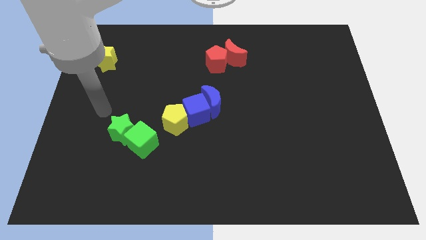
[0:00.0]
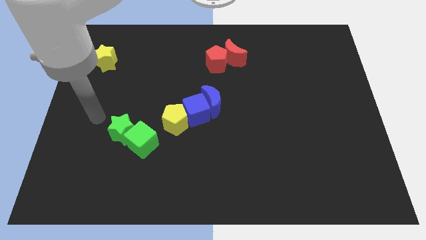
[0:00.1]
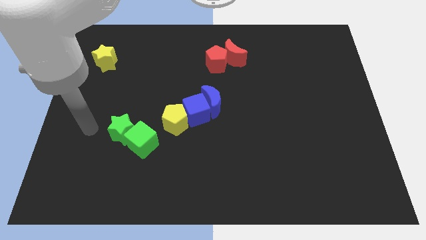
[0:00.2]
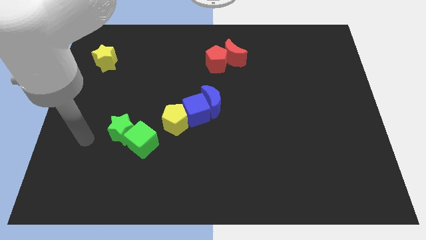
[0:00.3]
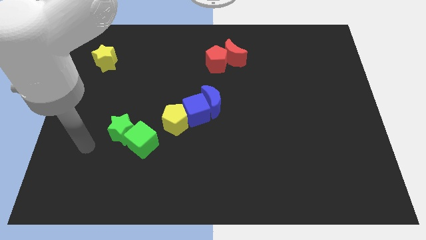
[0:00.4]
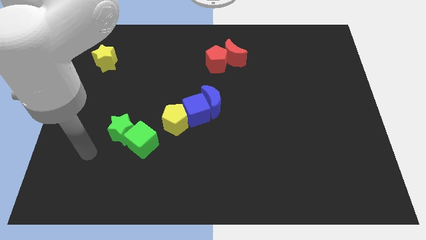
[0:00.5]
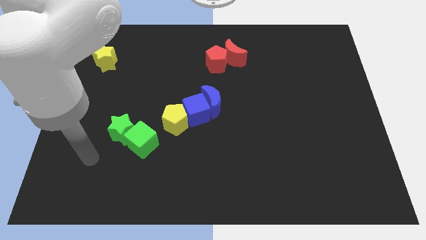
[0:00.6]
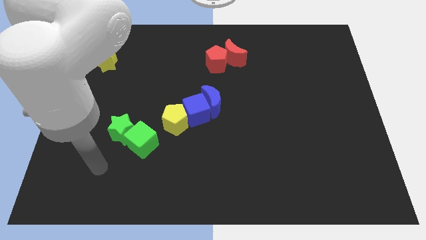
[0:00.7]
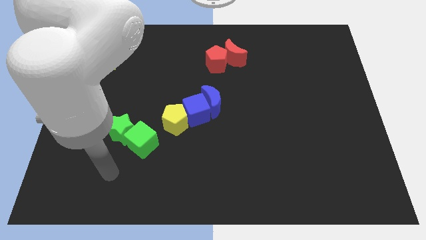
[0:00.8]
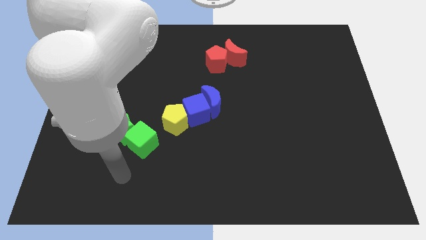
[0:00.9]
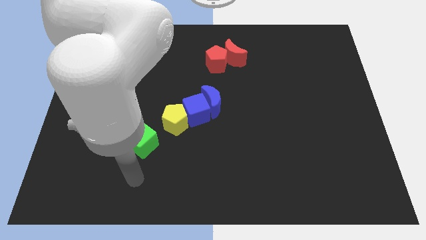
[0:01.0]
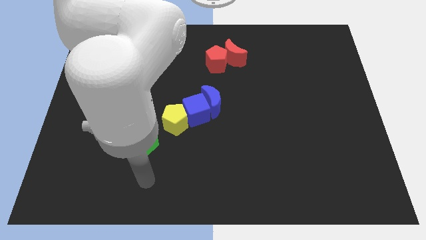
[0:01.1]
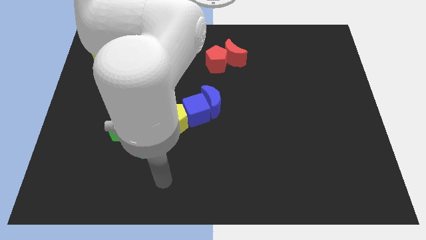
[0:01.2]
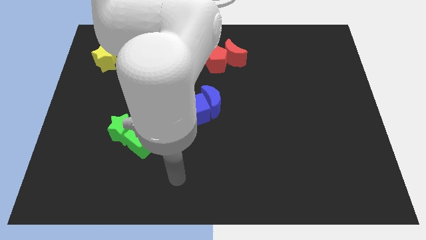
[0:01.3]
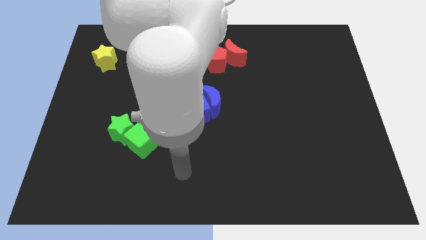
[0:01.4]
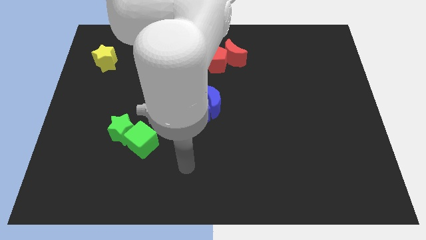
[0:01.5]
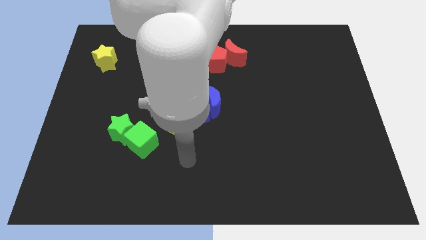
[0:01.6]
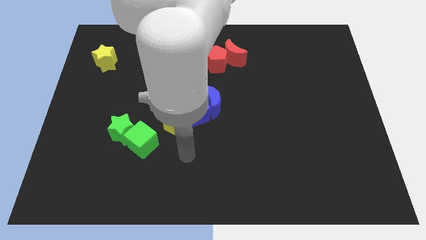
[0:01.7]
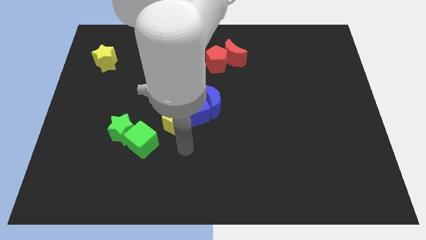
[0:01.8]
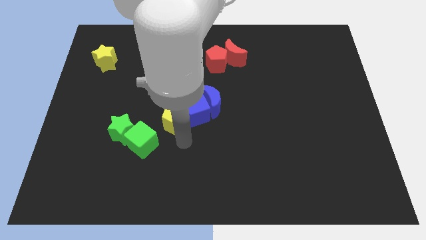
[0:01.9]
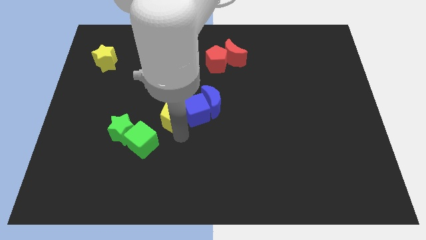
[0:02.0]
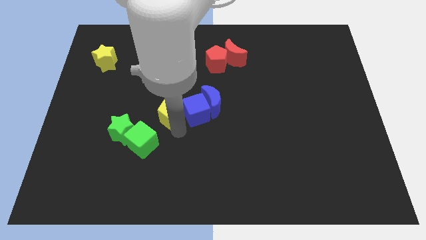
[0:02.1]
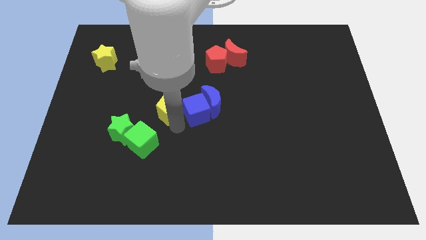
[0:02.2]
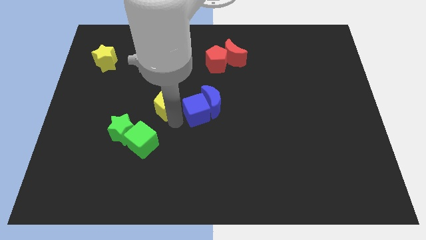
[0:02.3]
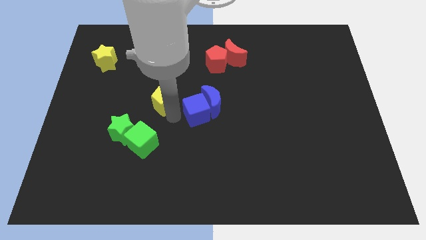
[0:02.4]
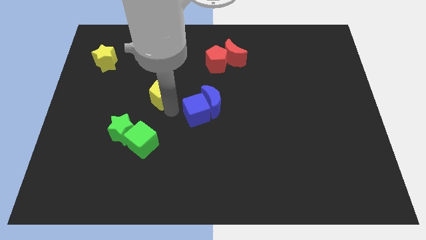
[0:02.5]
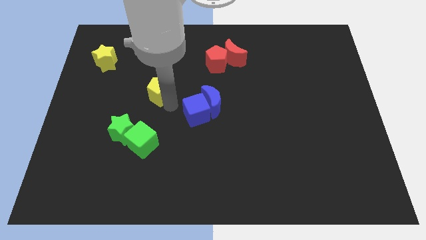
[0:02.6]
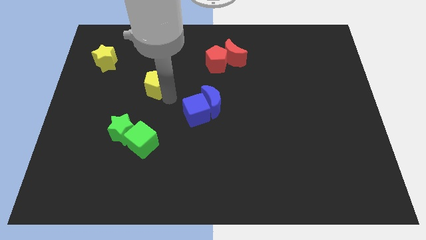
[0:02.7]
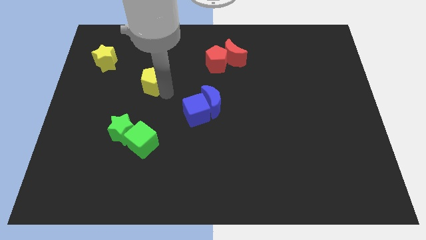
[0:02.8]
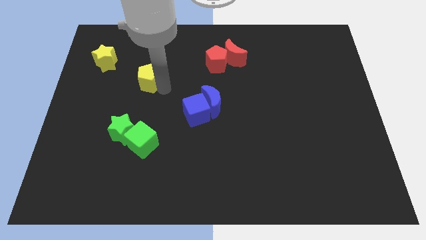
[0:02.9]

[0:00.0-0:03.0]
separate the yellow pentagon from cubes

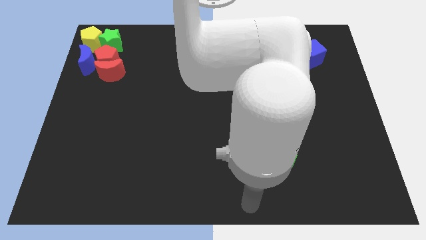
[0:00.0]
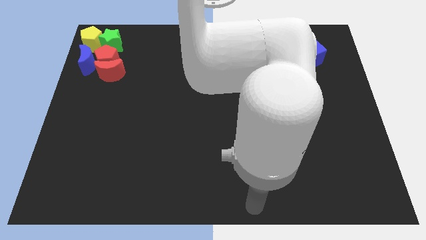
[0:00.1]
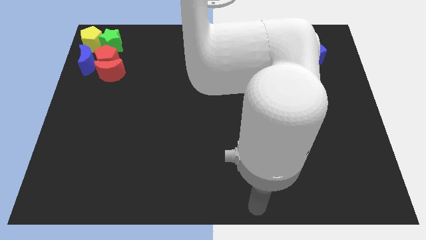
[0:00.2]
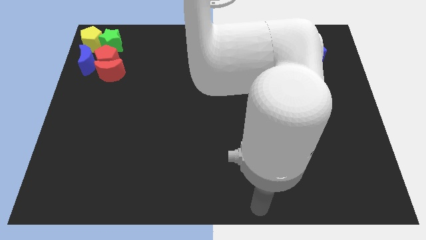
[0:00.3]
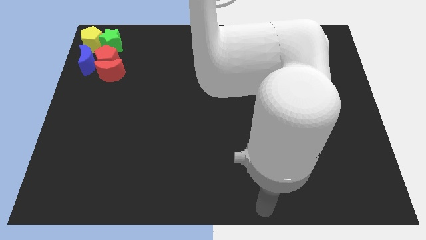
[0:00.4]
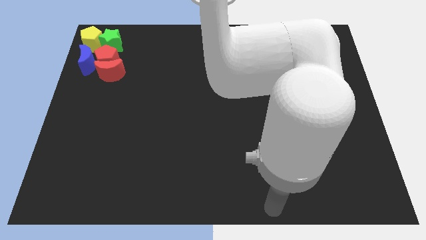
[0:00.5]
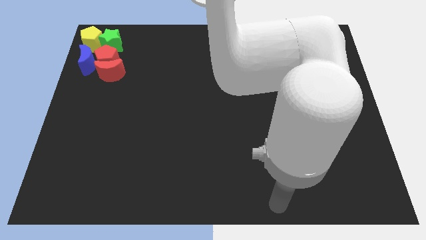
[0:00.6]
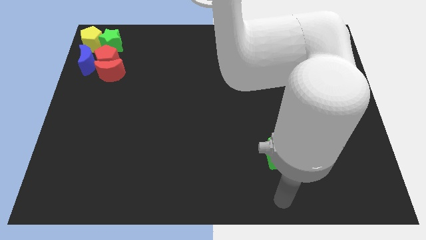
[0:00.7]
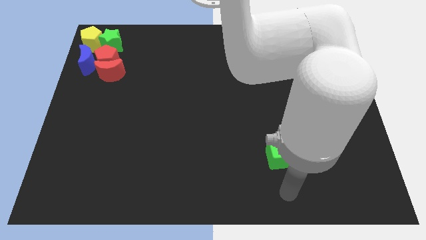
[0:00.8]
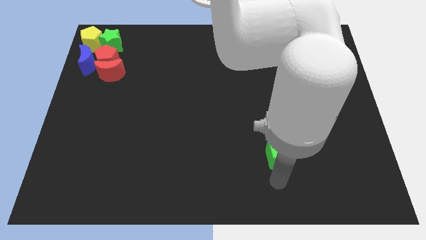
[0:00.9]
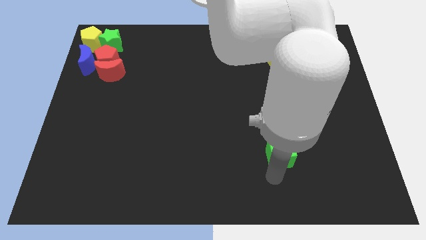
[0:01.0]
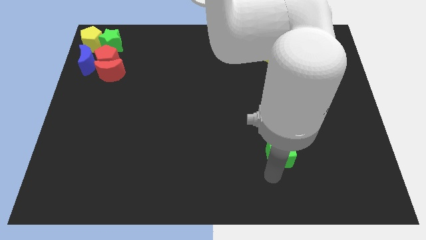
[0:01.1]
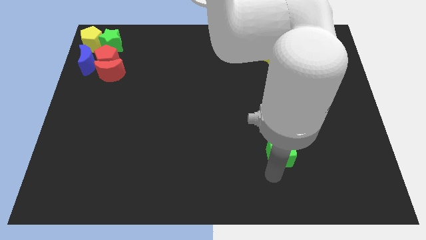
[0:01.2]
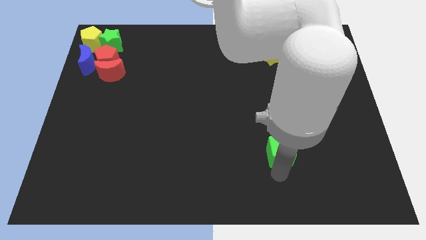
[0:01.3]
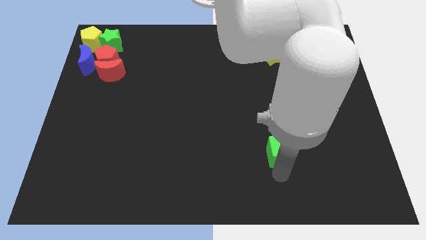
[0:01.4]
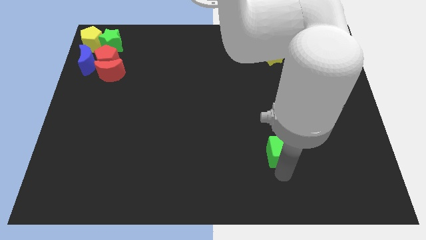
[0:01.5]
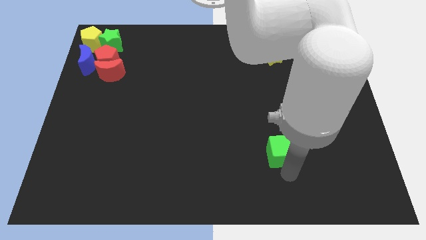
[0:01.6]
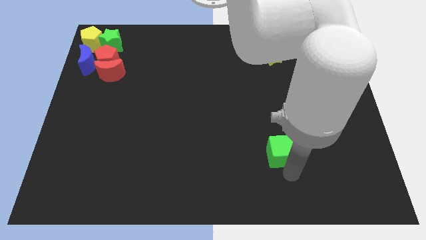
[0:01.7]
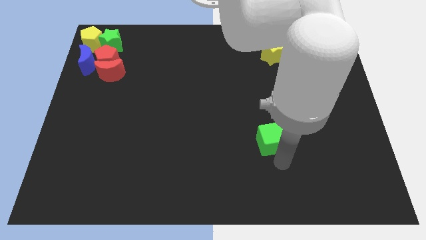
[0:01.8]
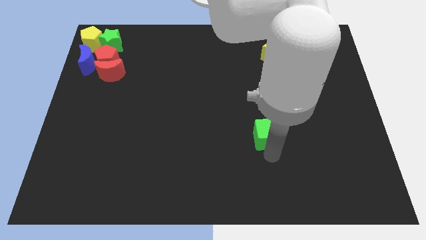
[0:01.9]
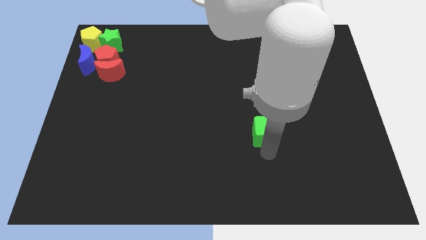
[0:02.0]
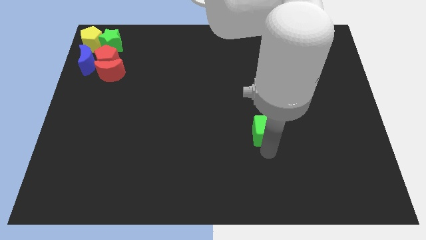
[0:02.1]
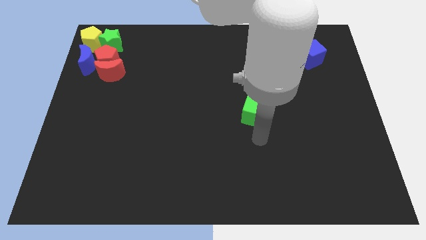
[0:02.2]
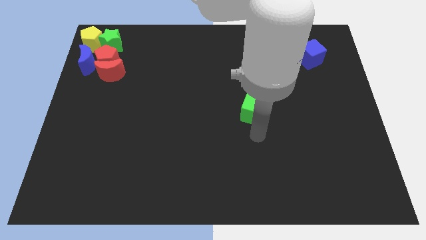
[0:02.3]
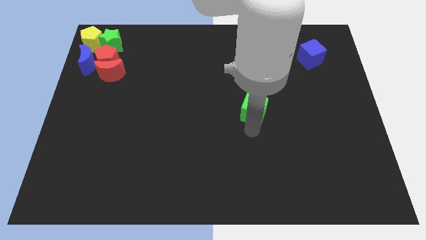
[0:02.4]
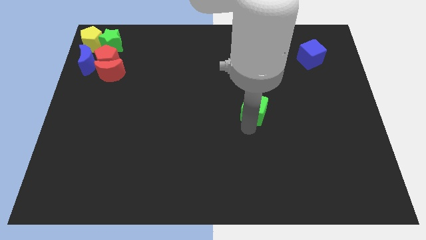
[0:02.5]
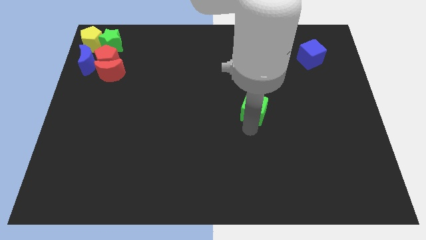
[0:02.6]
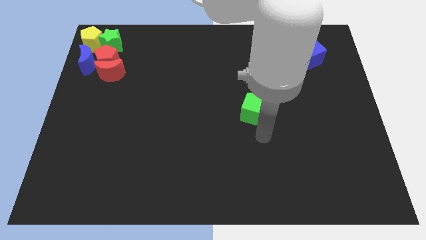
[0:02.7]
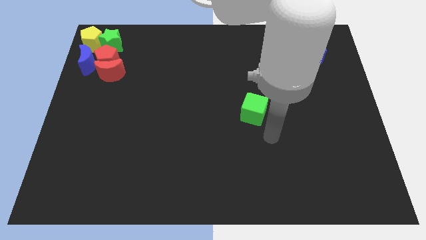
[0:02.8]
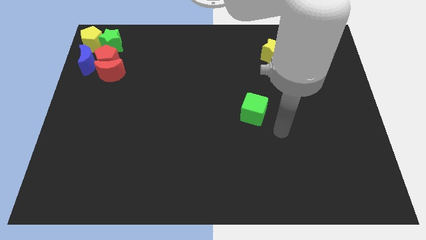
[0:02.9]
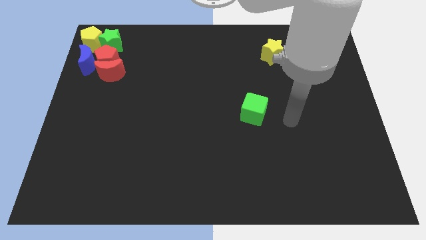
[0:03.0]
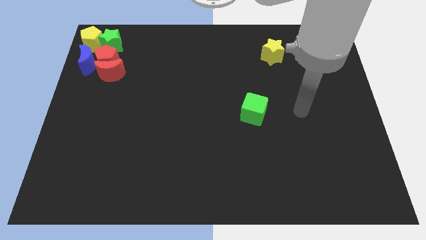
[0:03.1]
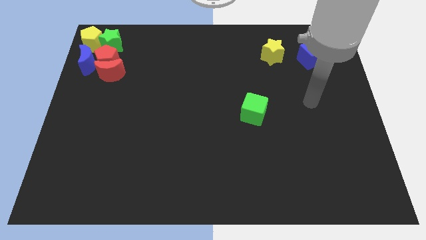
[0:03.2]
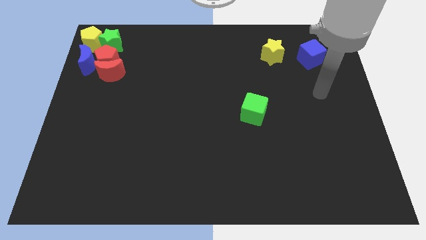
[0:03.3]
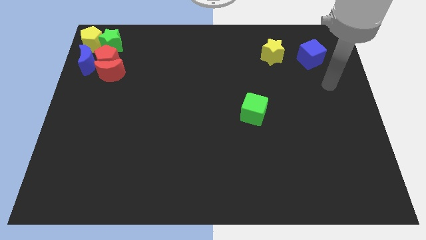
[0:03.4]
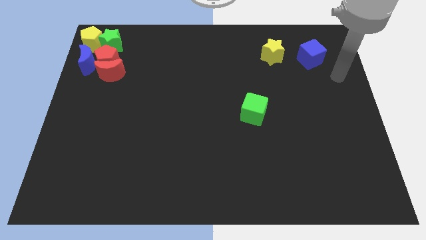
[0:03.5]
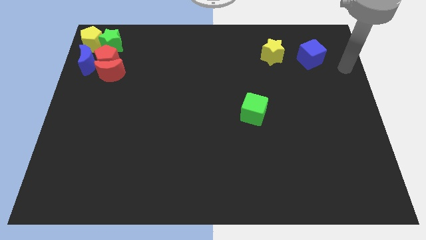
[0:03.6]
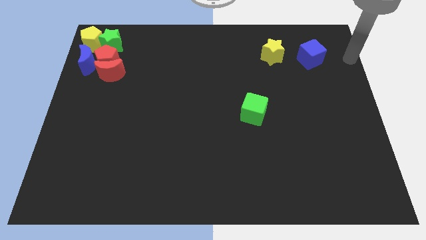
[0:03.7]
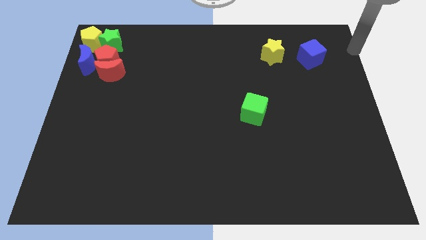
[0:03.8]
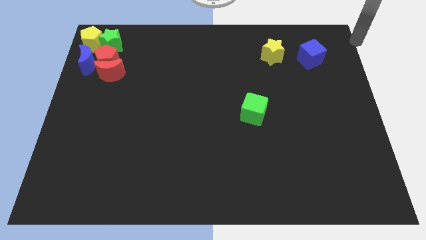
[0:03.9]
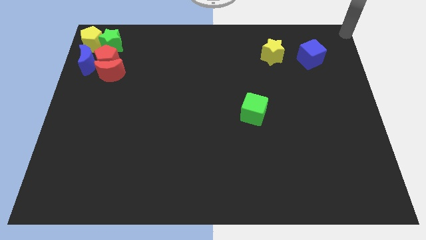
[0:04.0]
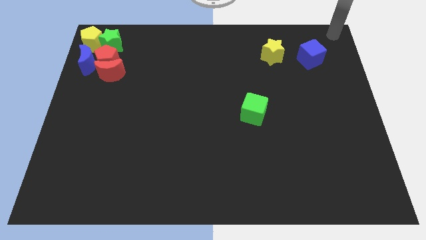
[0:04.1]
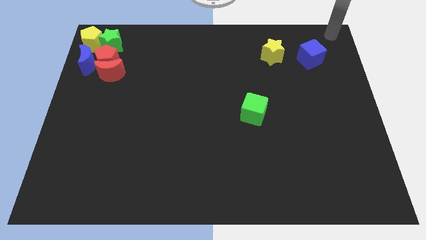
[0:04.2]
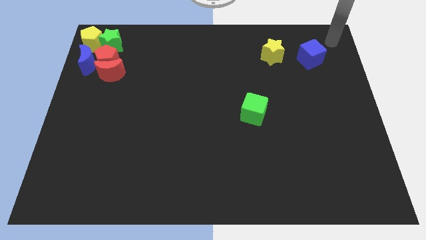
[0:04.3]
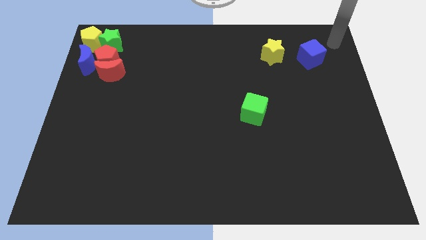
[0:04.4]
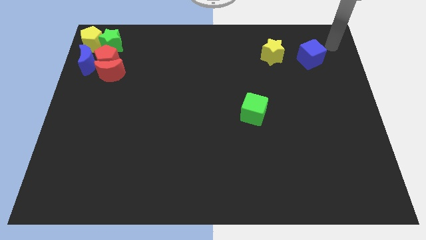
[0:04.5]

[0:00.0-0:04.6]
place the green cube digaonally to the yellow star

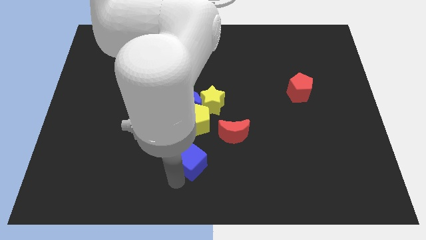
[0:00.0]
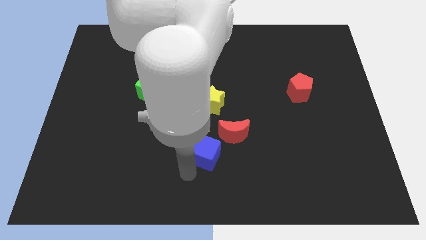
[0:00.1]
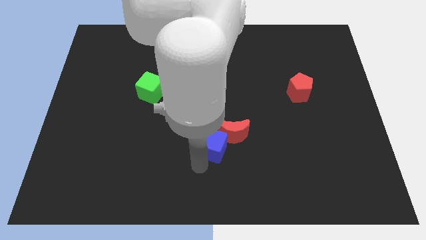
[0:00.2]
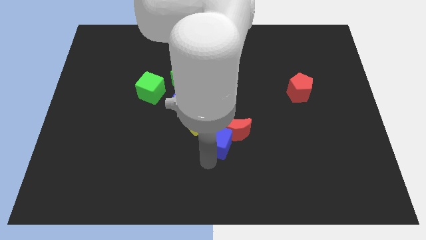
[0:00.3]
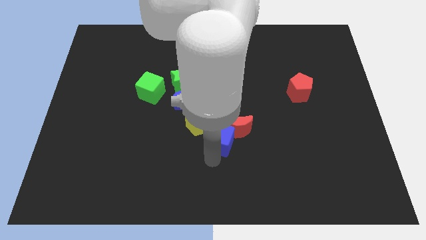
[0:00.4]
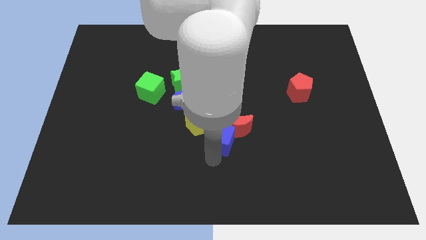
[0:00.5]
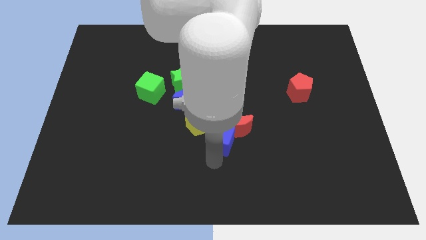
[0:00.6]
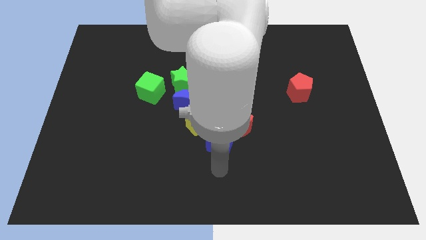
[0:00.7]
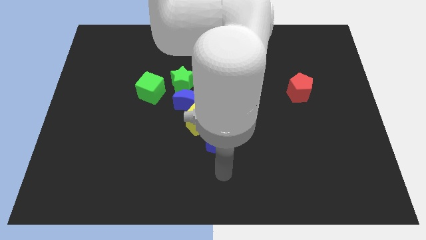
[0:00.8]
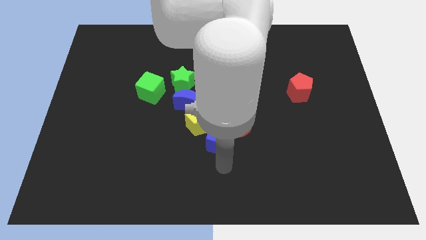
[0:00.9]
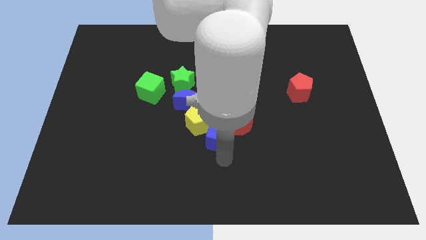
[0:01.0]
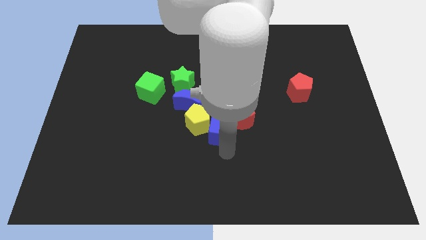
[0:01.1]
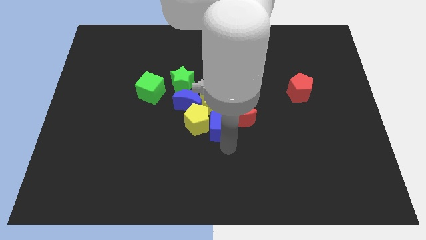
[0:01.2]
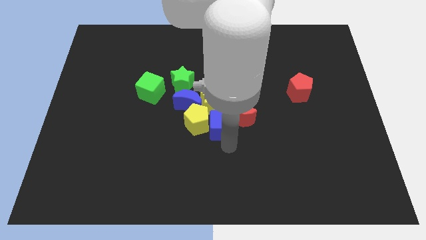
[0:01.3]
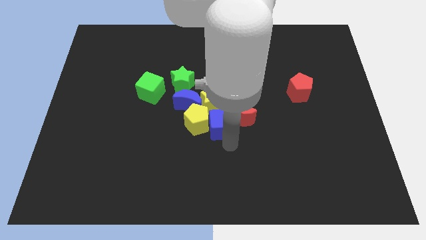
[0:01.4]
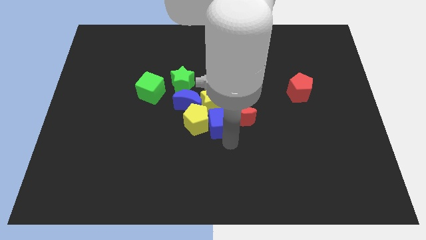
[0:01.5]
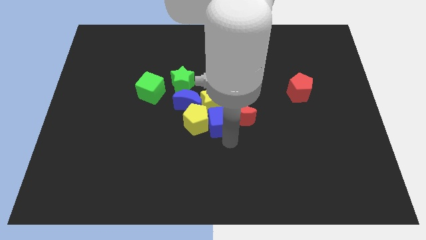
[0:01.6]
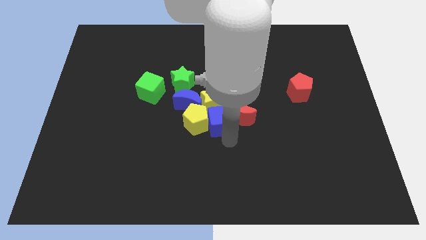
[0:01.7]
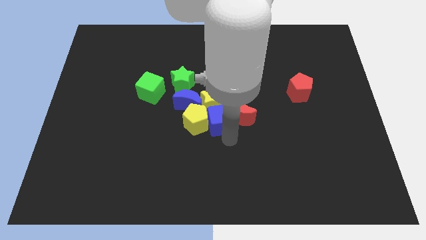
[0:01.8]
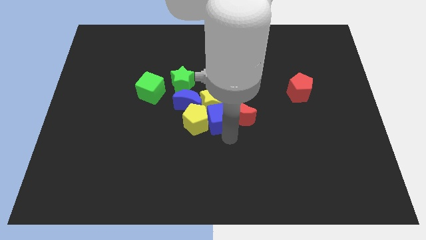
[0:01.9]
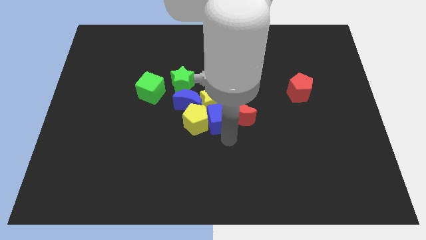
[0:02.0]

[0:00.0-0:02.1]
place the blue cube in between yellow pentagon and red crescent
